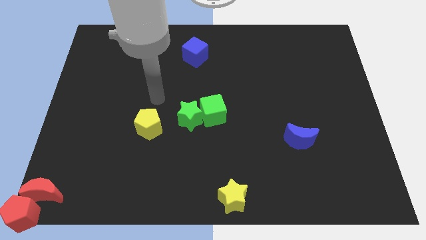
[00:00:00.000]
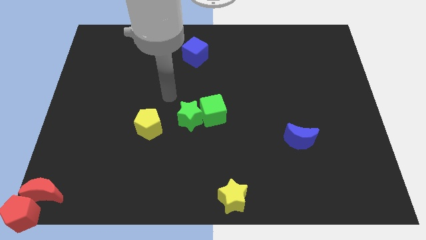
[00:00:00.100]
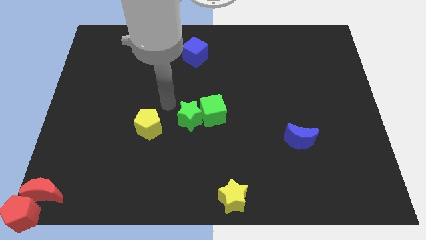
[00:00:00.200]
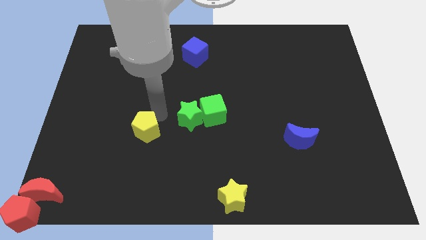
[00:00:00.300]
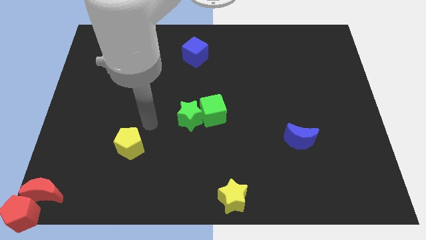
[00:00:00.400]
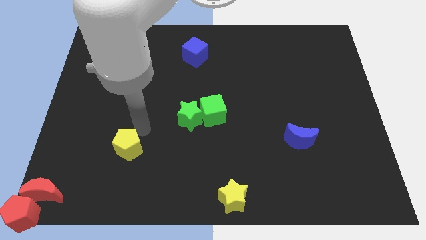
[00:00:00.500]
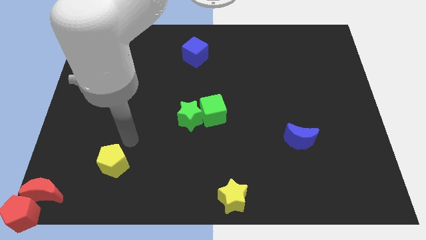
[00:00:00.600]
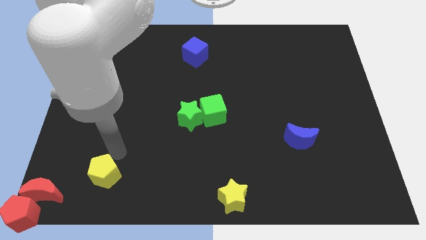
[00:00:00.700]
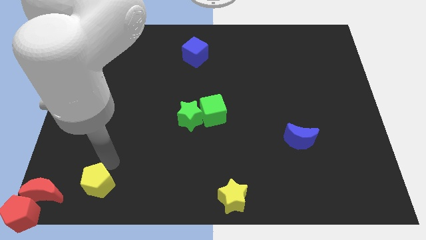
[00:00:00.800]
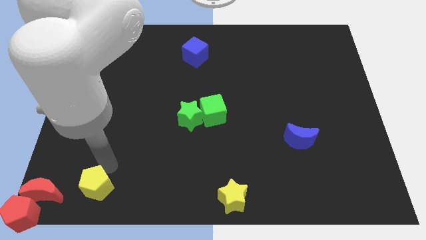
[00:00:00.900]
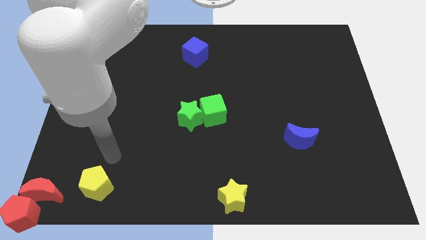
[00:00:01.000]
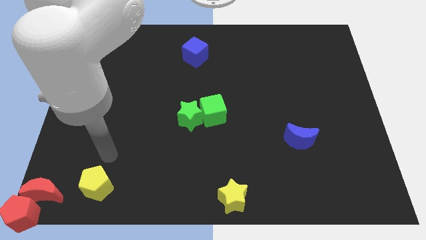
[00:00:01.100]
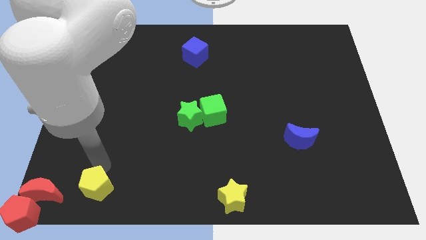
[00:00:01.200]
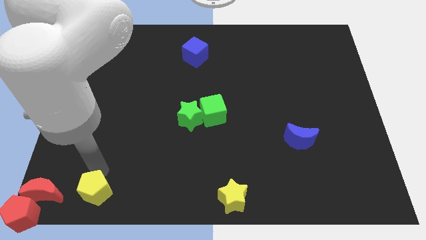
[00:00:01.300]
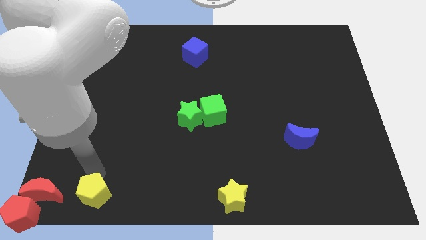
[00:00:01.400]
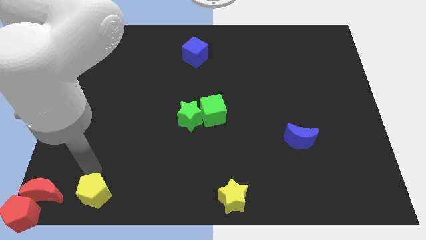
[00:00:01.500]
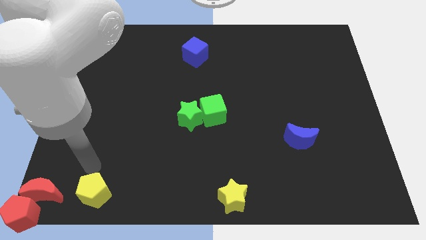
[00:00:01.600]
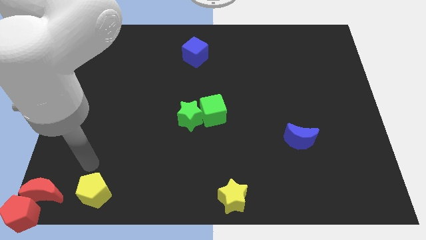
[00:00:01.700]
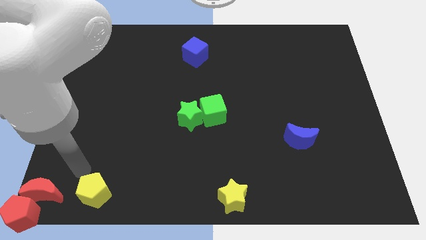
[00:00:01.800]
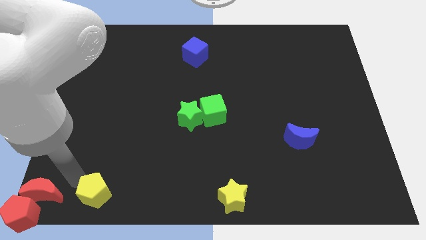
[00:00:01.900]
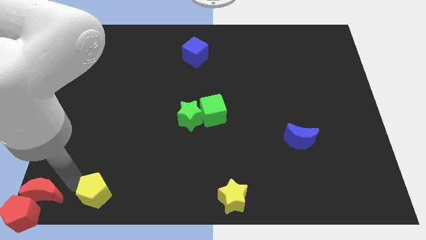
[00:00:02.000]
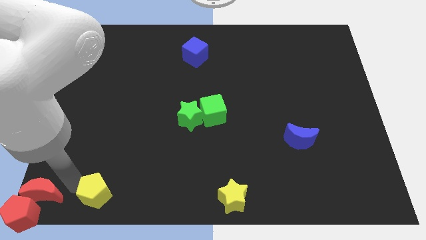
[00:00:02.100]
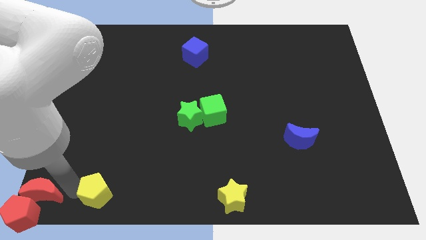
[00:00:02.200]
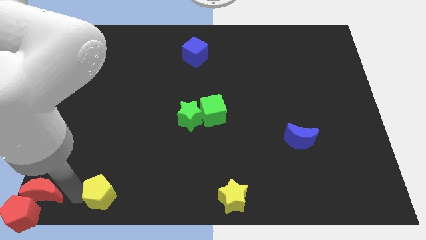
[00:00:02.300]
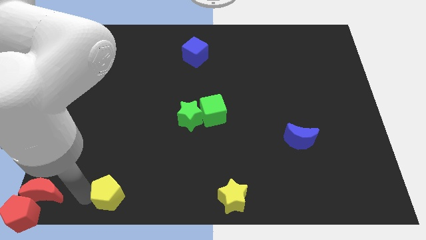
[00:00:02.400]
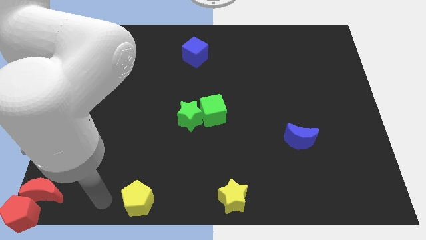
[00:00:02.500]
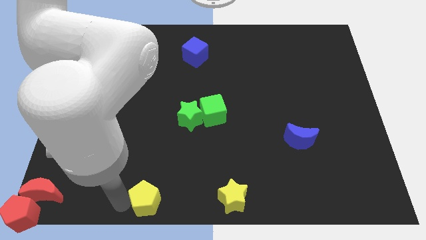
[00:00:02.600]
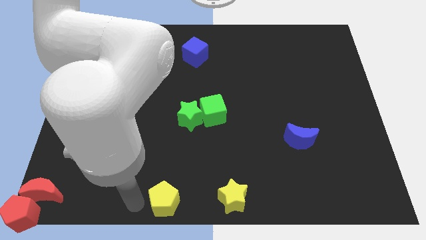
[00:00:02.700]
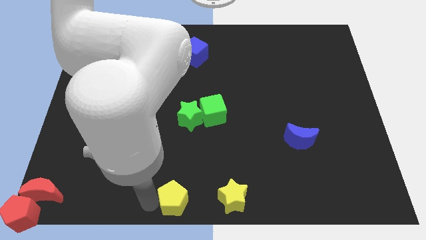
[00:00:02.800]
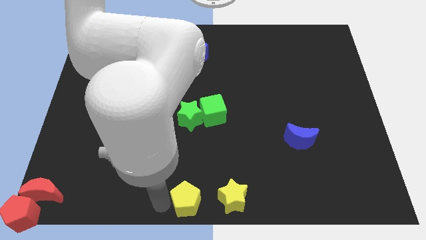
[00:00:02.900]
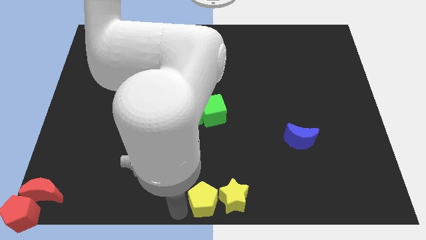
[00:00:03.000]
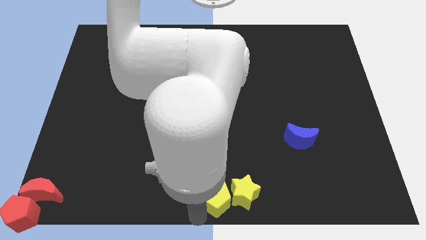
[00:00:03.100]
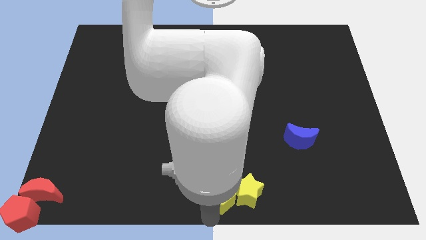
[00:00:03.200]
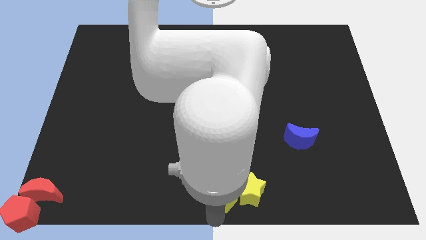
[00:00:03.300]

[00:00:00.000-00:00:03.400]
move the yellow pentagon into the yellow star

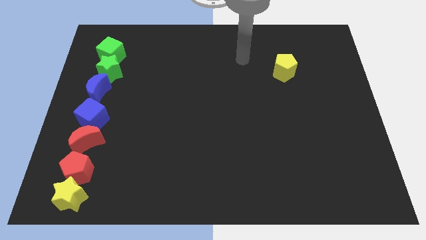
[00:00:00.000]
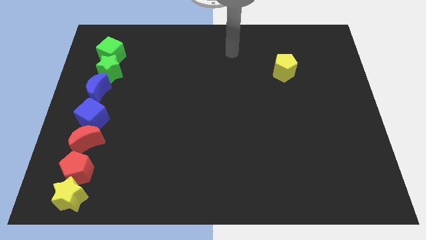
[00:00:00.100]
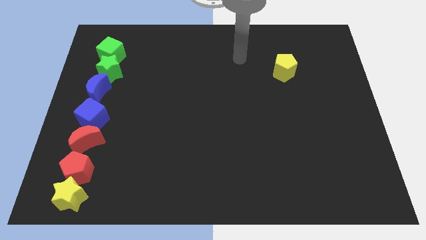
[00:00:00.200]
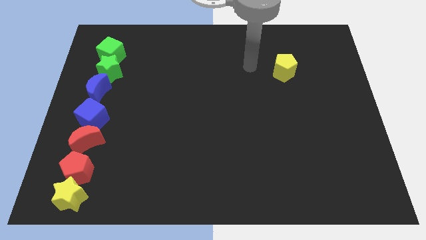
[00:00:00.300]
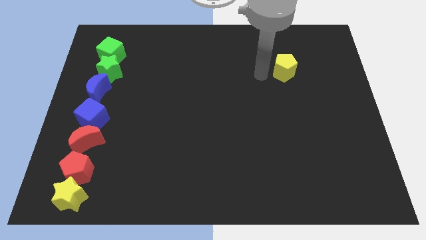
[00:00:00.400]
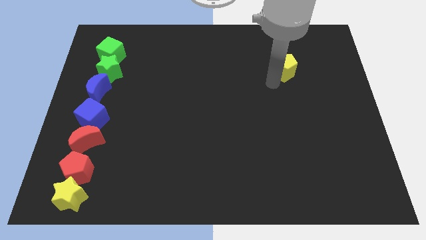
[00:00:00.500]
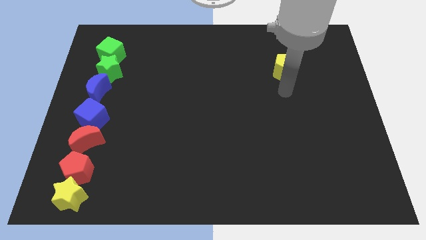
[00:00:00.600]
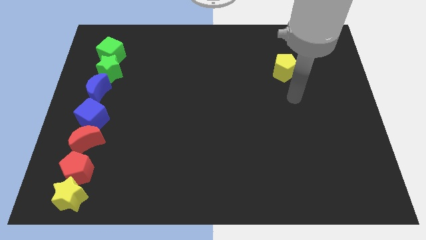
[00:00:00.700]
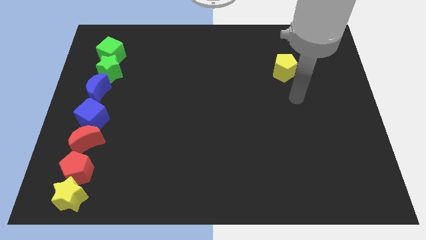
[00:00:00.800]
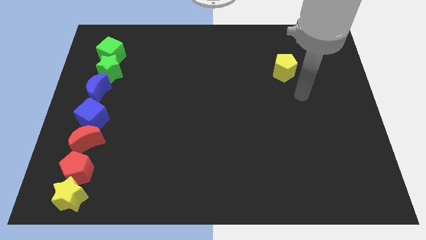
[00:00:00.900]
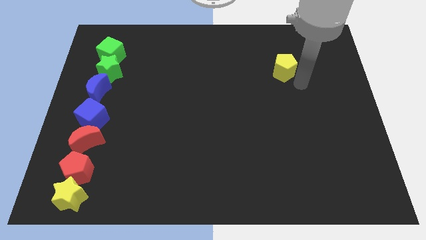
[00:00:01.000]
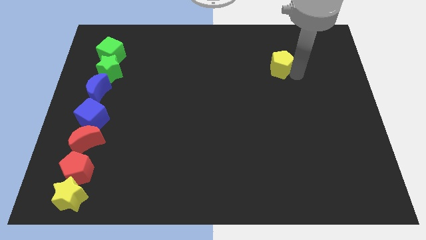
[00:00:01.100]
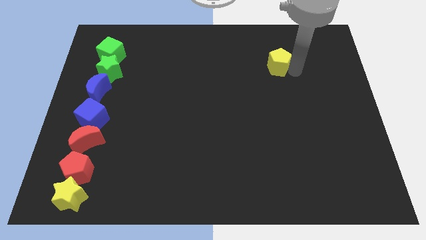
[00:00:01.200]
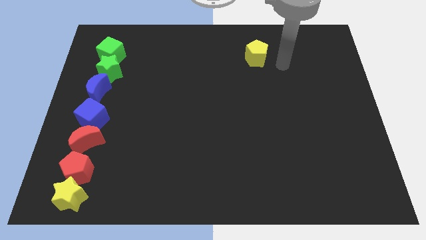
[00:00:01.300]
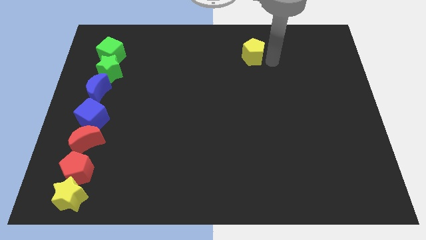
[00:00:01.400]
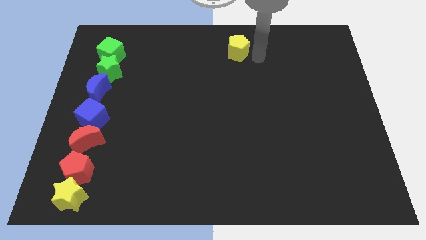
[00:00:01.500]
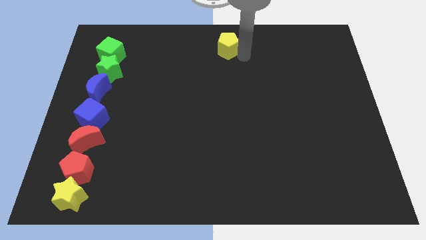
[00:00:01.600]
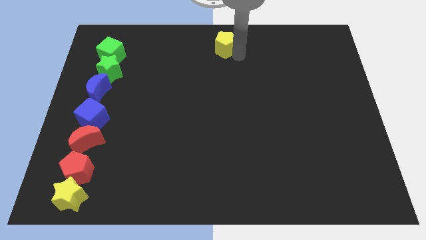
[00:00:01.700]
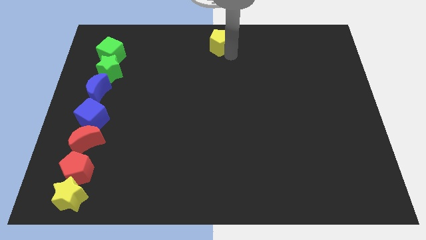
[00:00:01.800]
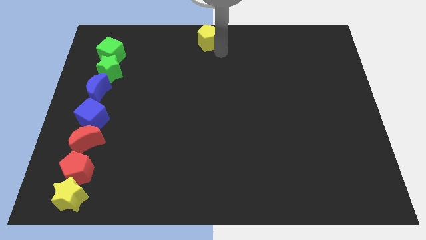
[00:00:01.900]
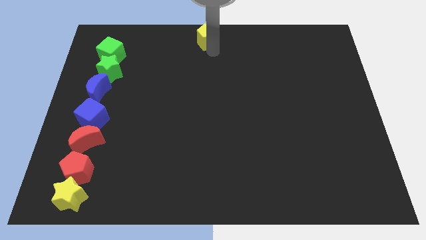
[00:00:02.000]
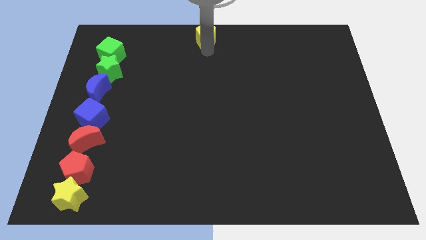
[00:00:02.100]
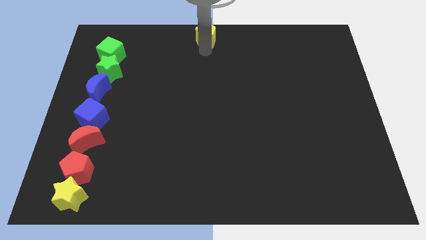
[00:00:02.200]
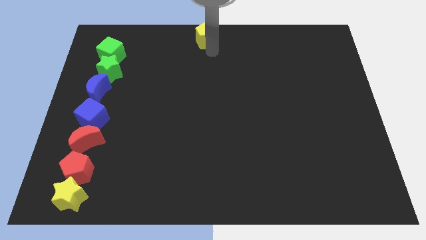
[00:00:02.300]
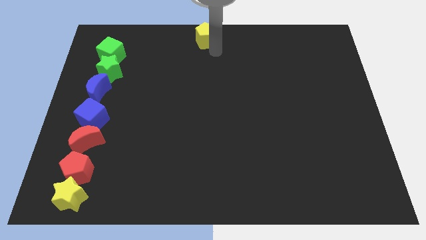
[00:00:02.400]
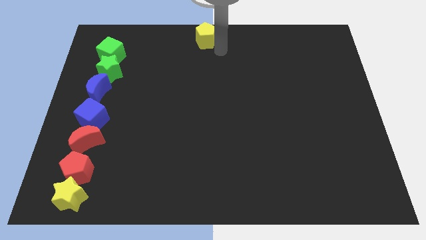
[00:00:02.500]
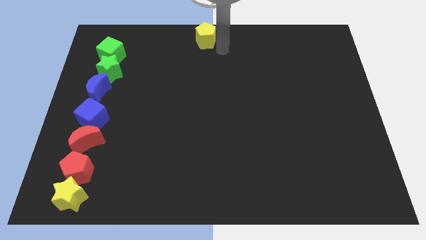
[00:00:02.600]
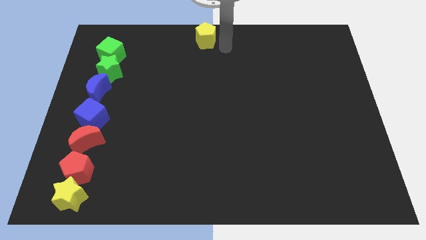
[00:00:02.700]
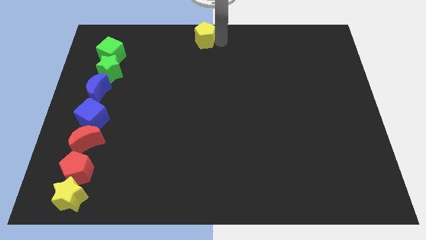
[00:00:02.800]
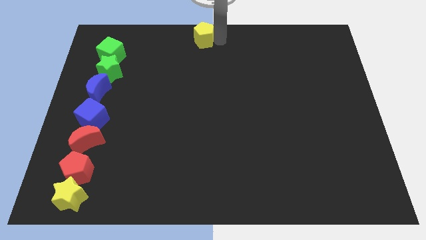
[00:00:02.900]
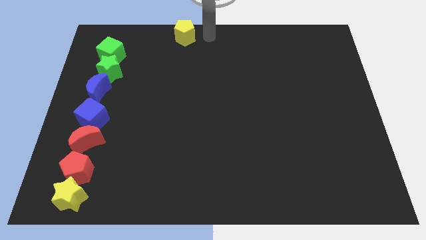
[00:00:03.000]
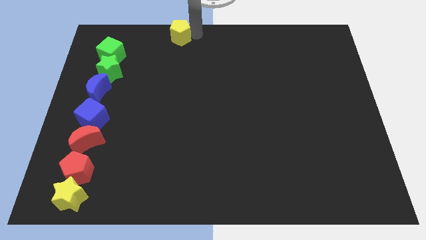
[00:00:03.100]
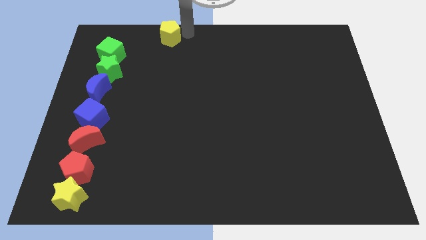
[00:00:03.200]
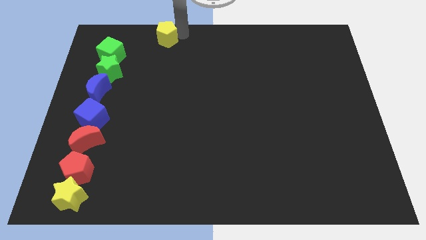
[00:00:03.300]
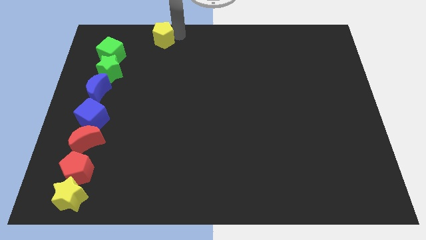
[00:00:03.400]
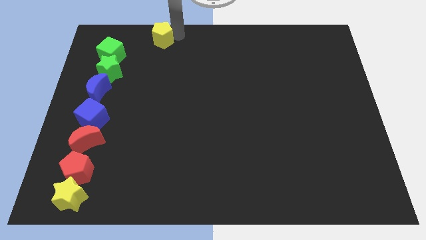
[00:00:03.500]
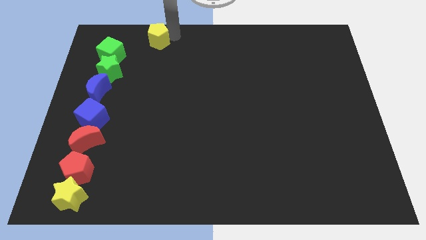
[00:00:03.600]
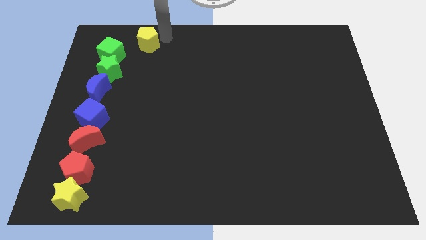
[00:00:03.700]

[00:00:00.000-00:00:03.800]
place yellow pentagon right above the green cube

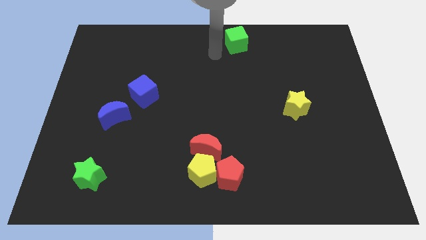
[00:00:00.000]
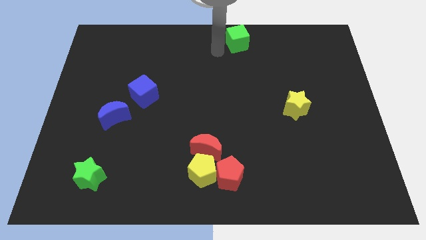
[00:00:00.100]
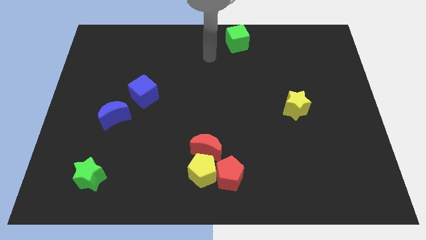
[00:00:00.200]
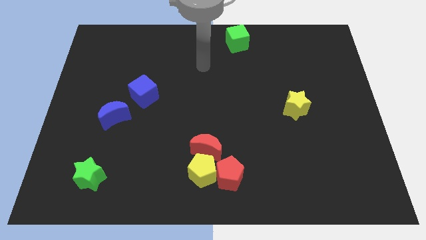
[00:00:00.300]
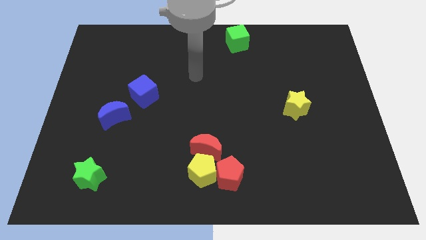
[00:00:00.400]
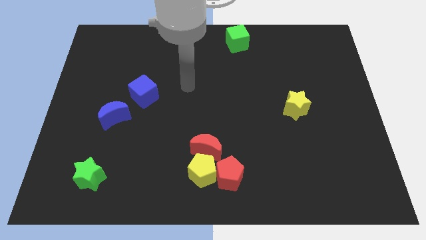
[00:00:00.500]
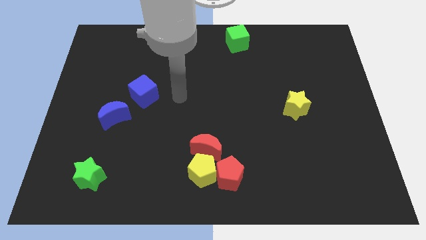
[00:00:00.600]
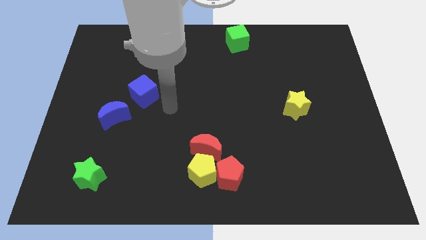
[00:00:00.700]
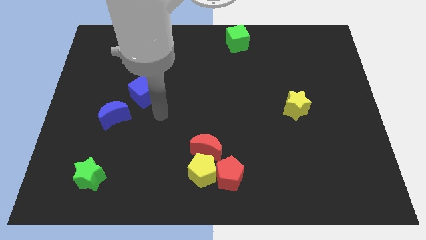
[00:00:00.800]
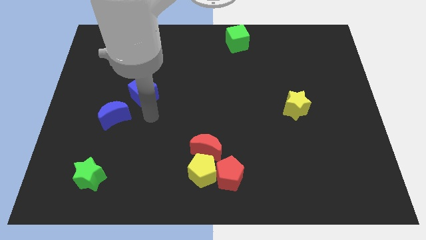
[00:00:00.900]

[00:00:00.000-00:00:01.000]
move away from the green cube

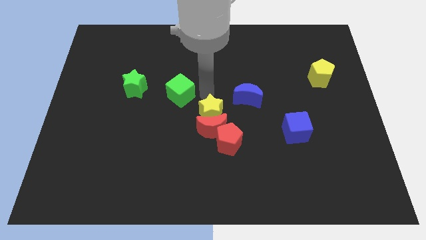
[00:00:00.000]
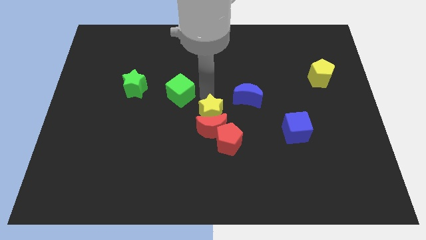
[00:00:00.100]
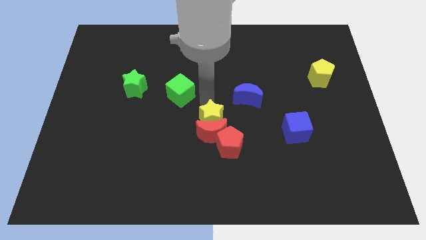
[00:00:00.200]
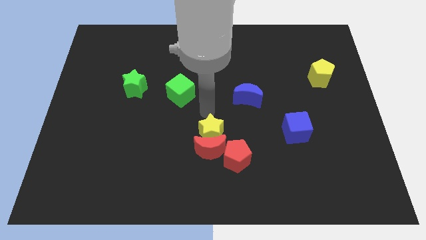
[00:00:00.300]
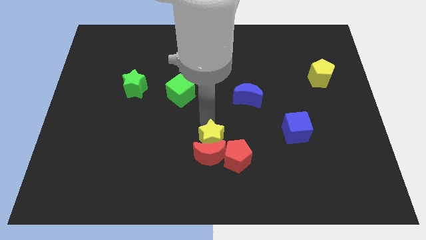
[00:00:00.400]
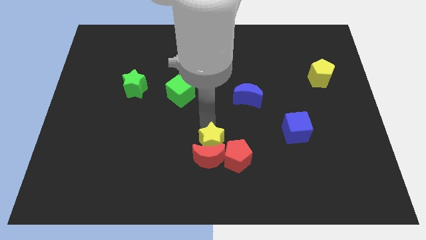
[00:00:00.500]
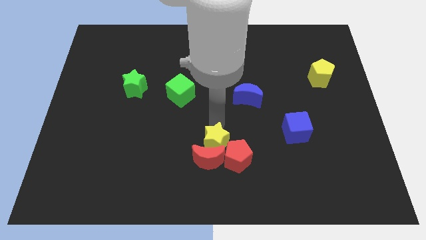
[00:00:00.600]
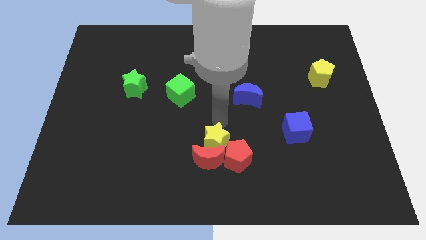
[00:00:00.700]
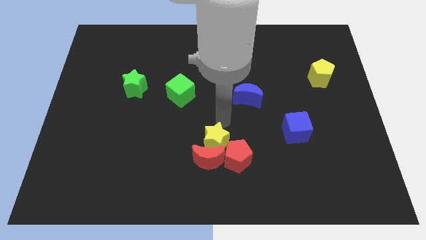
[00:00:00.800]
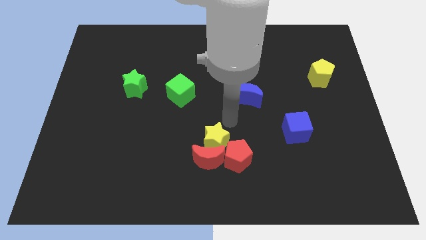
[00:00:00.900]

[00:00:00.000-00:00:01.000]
push the red crescent with the help of the yellow star towards the down
